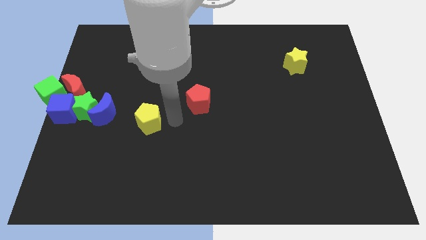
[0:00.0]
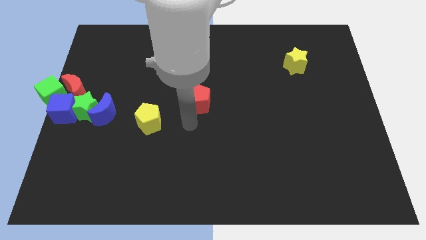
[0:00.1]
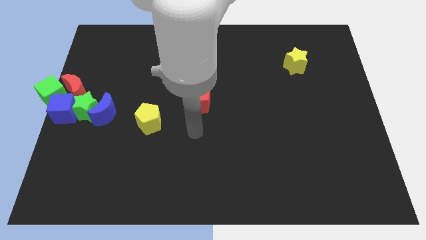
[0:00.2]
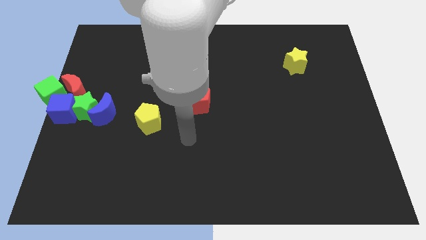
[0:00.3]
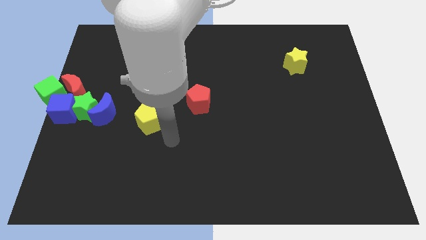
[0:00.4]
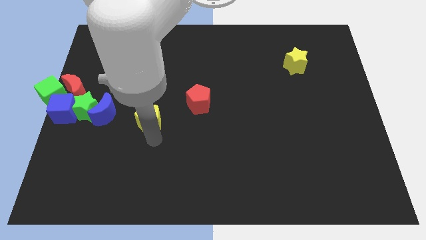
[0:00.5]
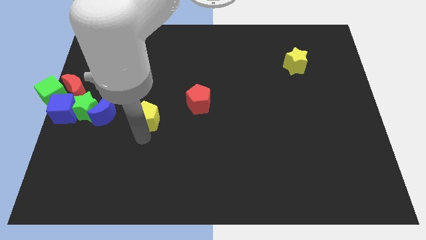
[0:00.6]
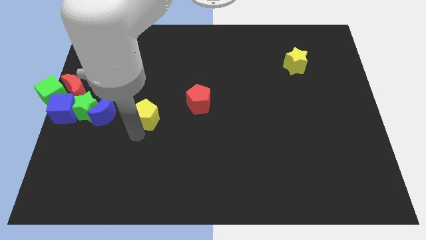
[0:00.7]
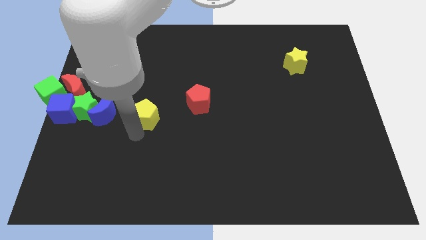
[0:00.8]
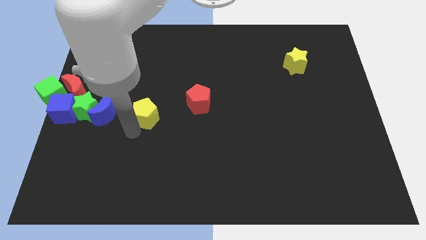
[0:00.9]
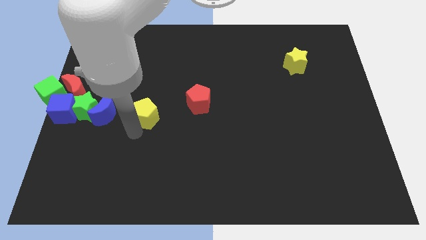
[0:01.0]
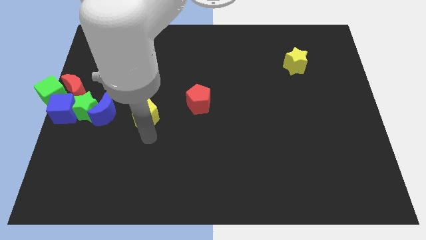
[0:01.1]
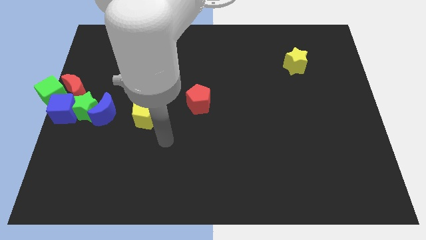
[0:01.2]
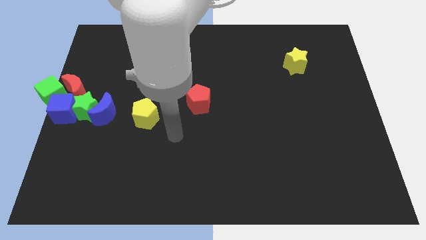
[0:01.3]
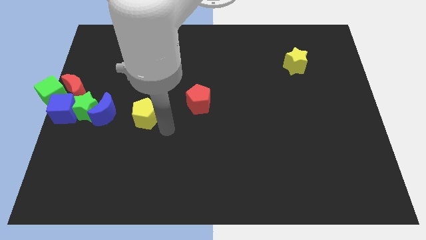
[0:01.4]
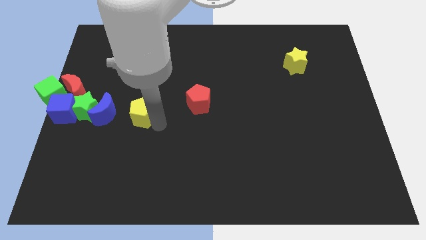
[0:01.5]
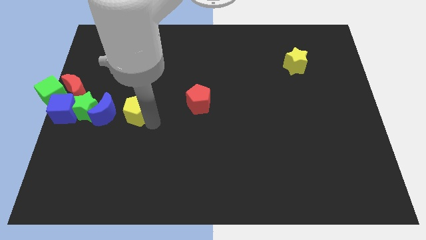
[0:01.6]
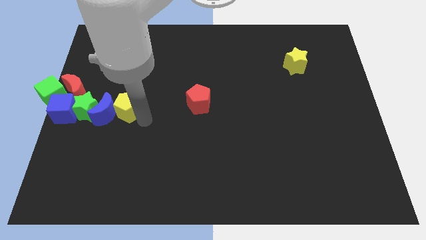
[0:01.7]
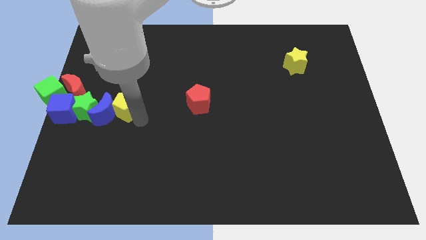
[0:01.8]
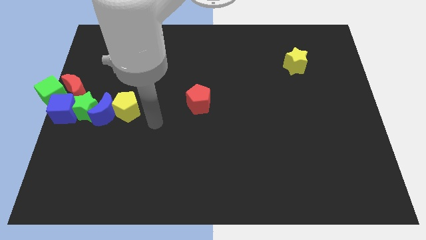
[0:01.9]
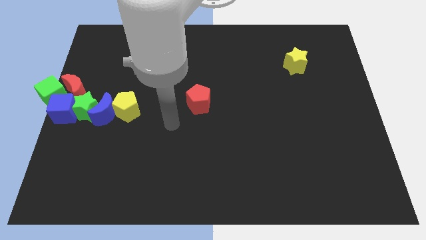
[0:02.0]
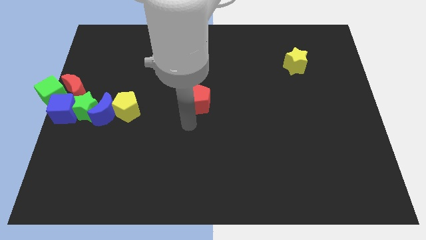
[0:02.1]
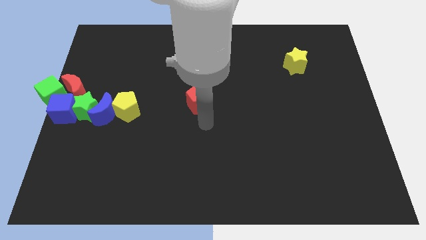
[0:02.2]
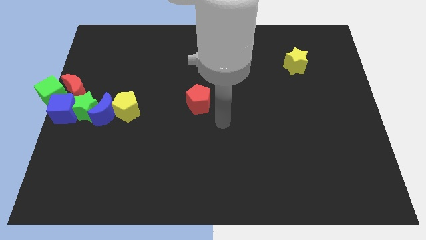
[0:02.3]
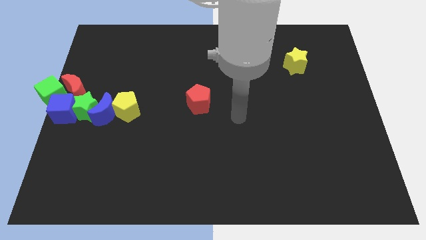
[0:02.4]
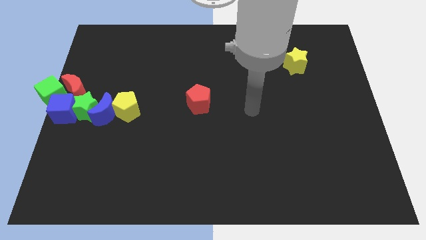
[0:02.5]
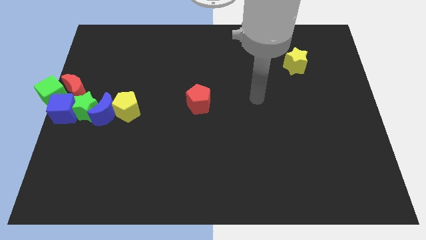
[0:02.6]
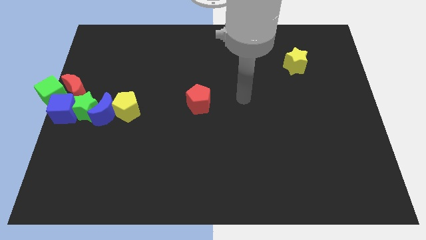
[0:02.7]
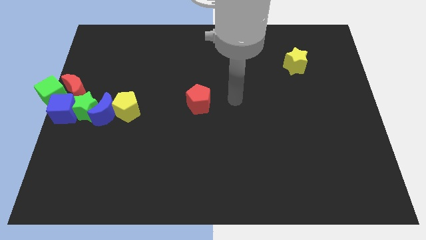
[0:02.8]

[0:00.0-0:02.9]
place the yellow pentagon right of the blue moon

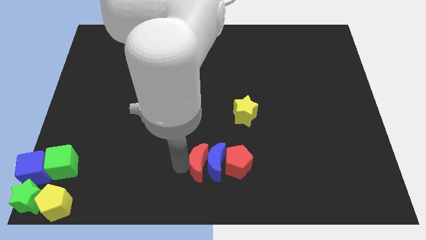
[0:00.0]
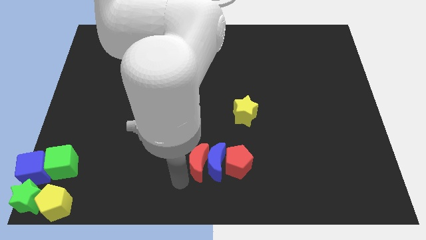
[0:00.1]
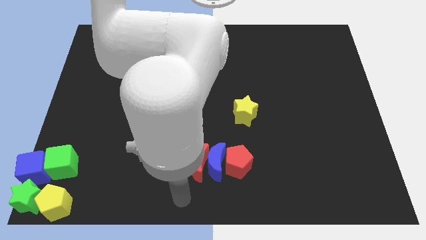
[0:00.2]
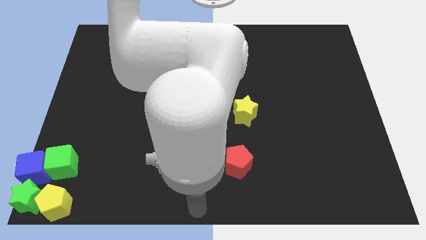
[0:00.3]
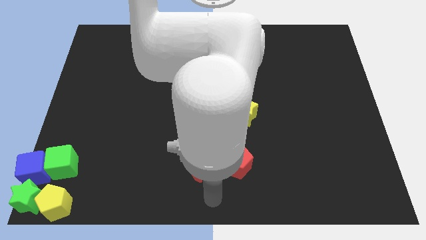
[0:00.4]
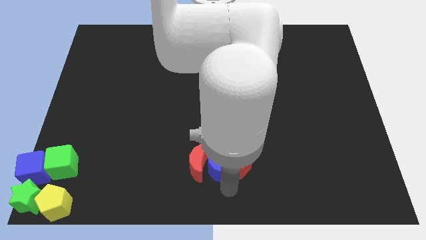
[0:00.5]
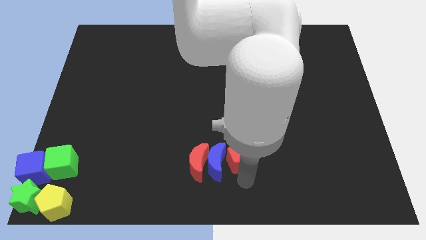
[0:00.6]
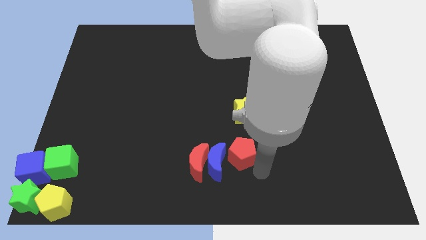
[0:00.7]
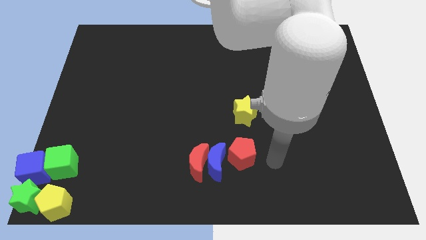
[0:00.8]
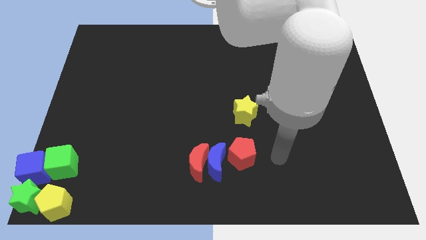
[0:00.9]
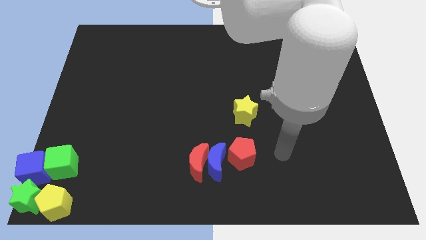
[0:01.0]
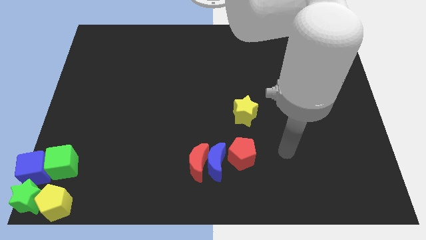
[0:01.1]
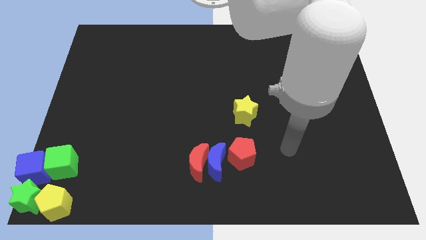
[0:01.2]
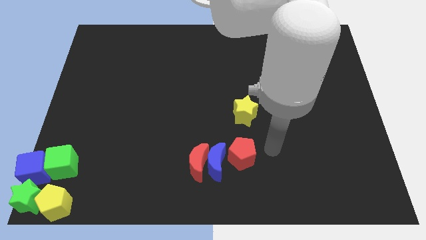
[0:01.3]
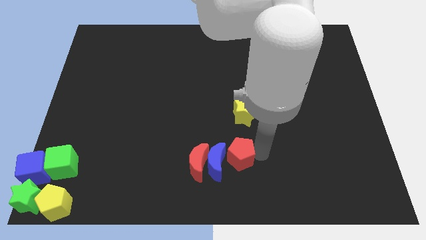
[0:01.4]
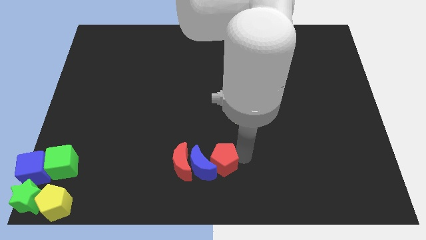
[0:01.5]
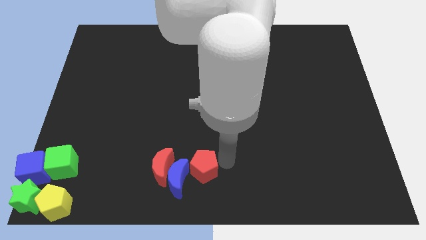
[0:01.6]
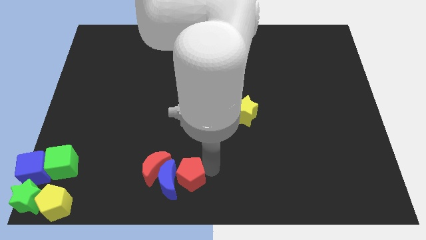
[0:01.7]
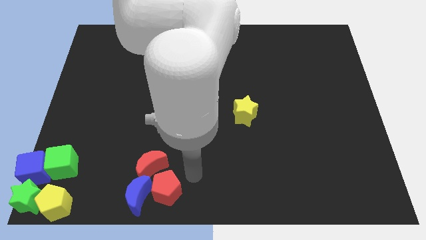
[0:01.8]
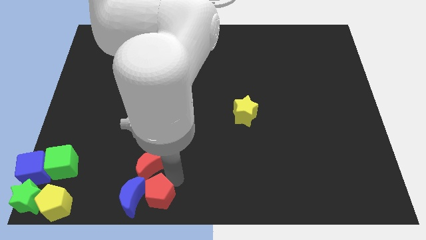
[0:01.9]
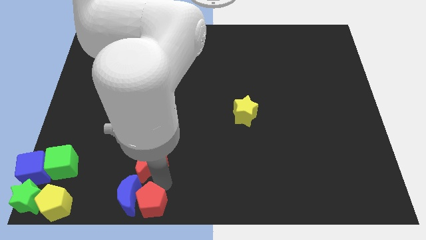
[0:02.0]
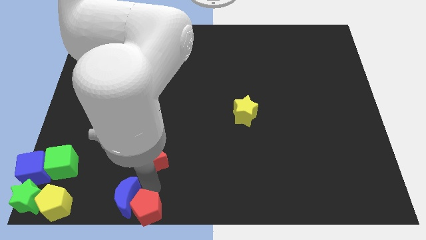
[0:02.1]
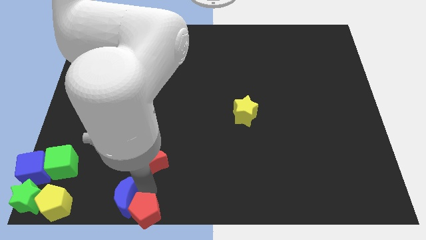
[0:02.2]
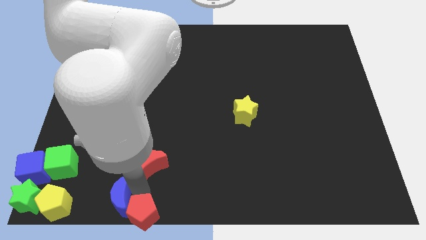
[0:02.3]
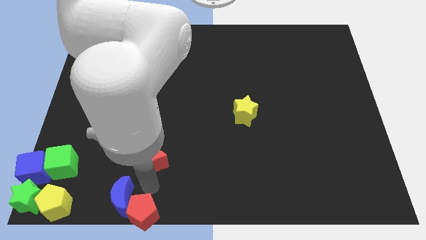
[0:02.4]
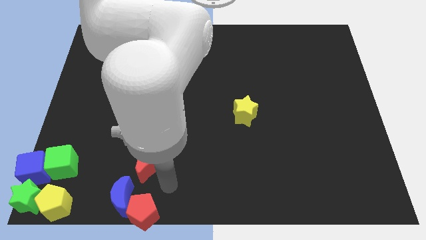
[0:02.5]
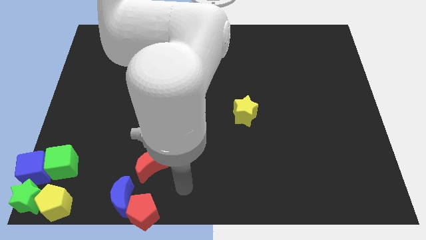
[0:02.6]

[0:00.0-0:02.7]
drag the red pentagon and blue moon to the bottom center

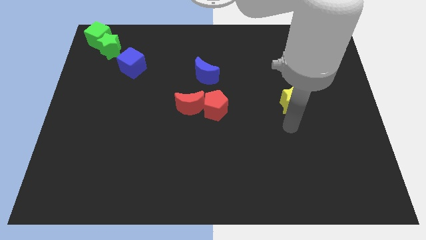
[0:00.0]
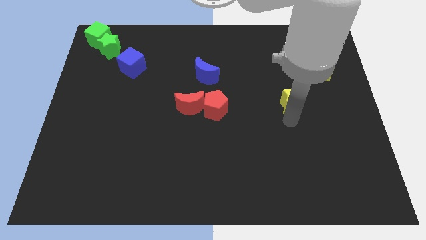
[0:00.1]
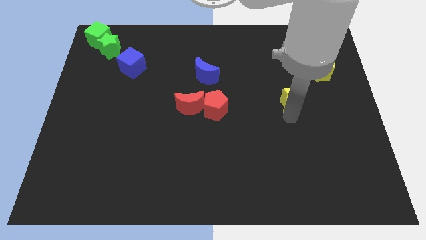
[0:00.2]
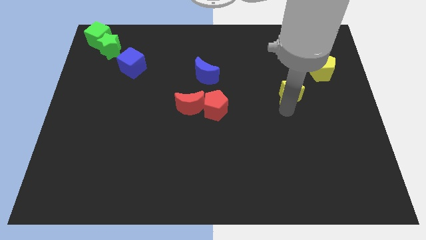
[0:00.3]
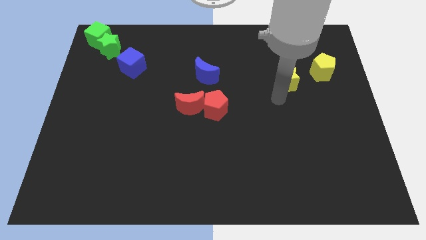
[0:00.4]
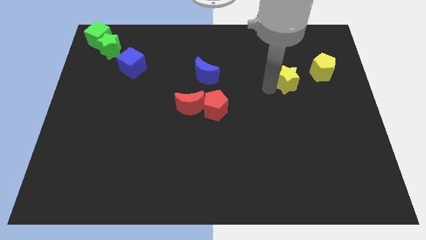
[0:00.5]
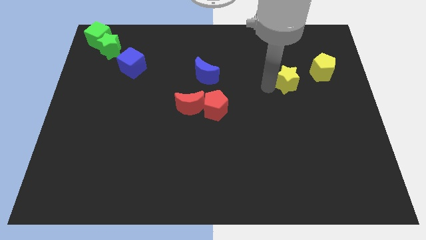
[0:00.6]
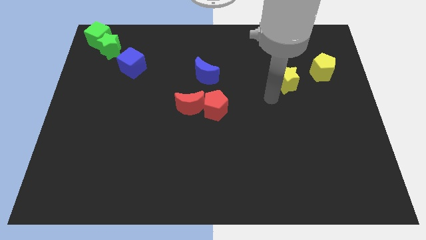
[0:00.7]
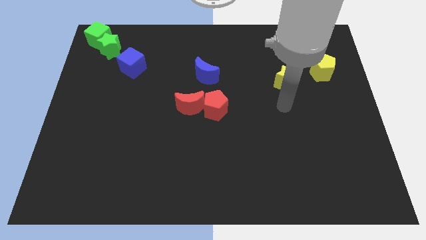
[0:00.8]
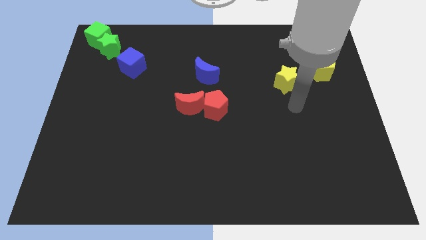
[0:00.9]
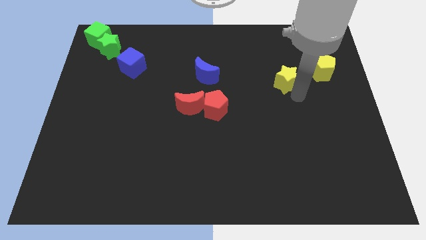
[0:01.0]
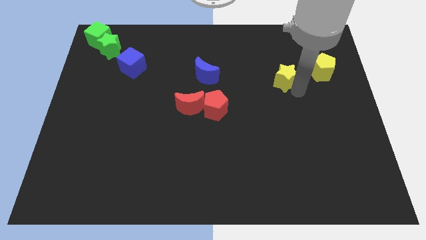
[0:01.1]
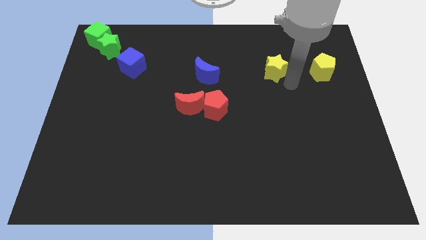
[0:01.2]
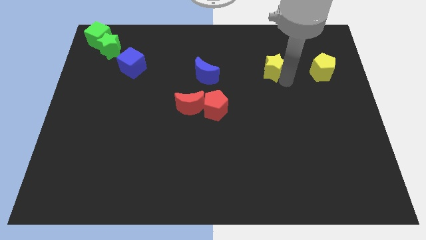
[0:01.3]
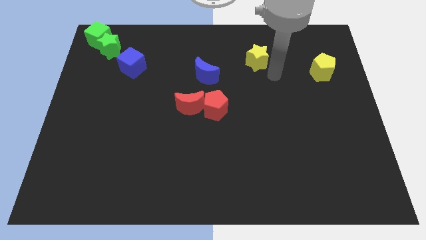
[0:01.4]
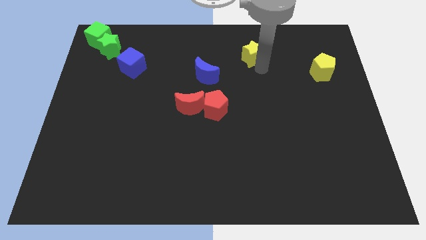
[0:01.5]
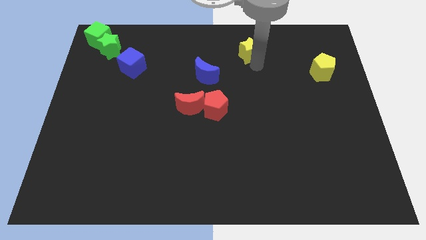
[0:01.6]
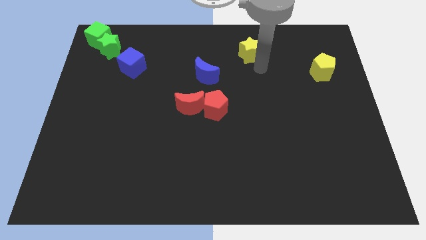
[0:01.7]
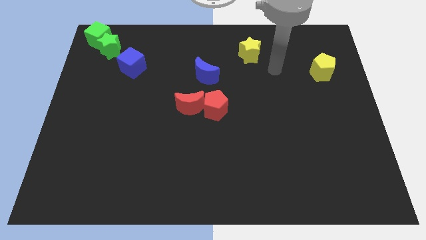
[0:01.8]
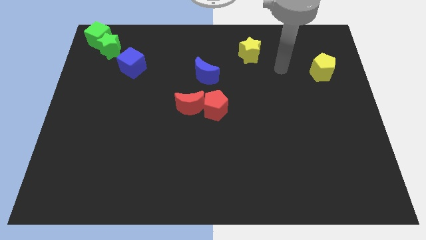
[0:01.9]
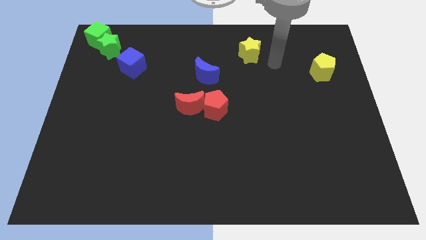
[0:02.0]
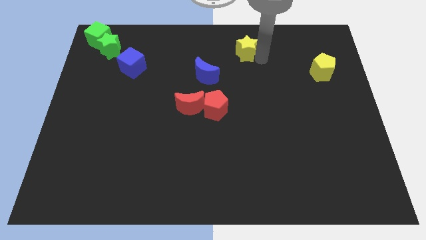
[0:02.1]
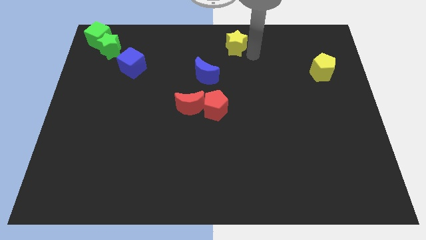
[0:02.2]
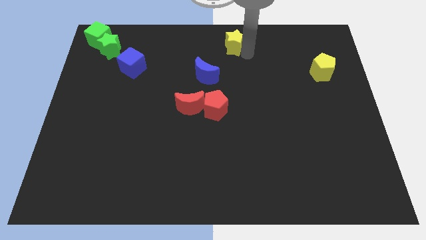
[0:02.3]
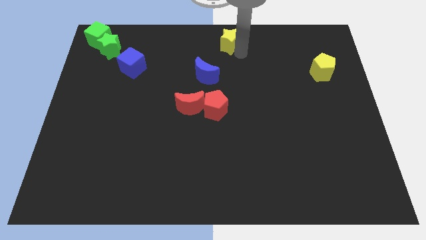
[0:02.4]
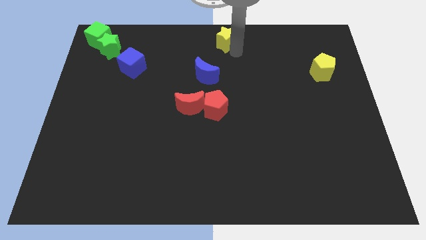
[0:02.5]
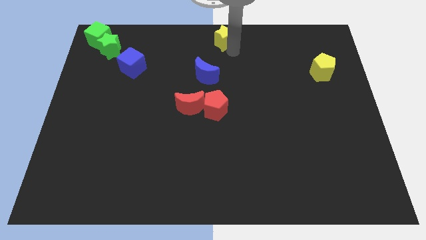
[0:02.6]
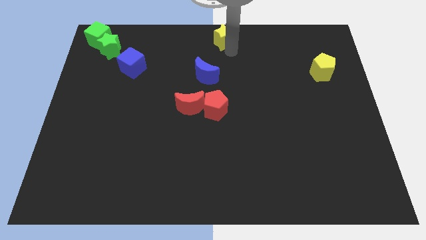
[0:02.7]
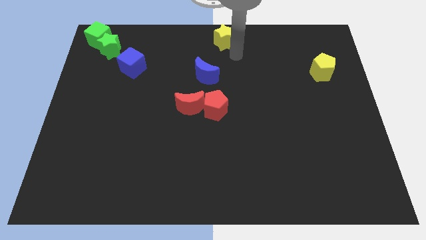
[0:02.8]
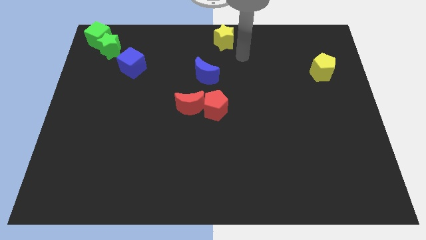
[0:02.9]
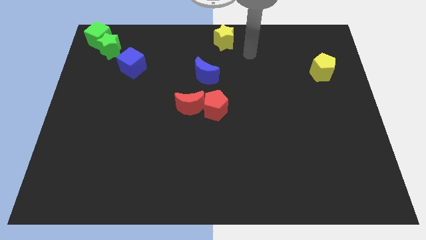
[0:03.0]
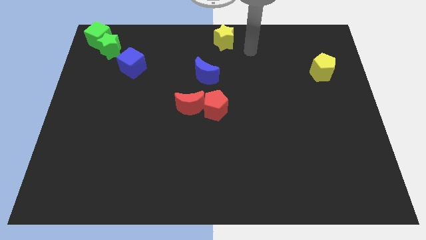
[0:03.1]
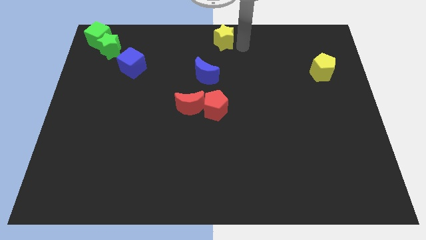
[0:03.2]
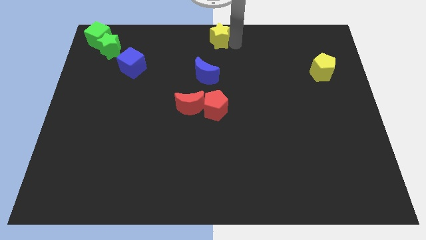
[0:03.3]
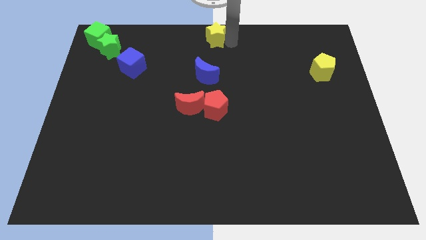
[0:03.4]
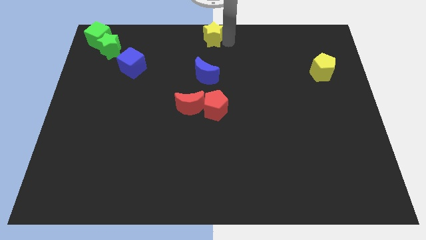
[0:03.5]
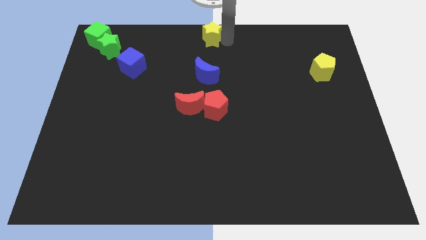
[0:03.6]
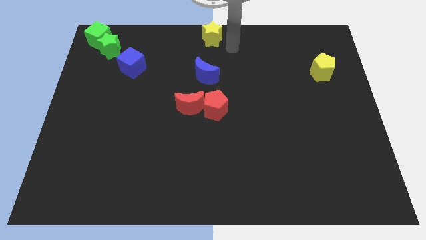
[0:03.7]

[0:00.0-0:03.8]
push the yellow star at the top center of the board
